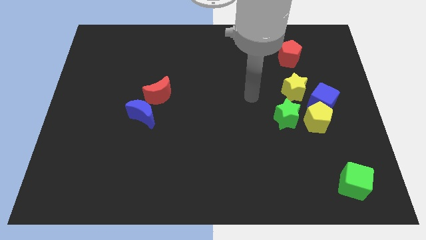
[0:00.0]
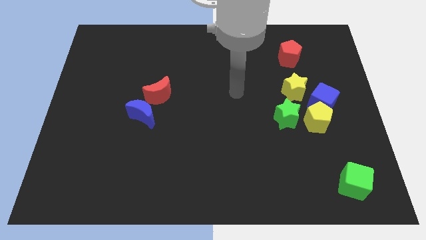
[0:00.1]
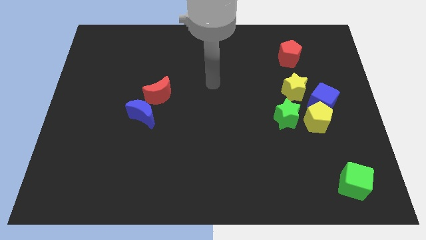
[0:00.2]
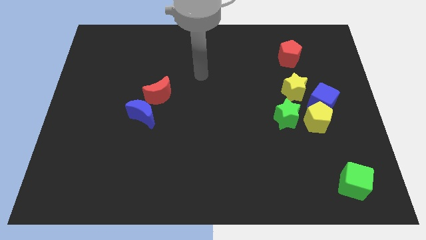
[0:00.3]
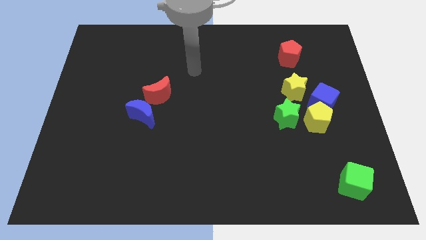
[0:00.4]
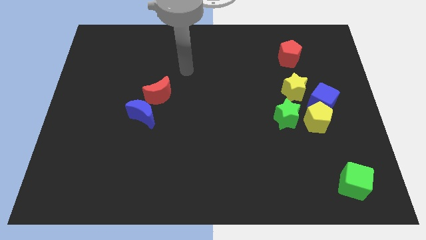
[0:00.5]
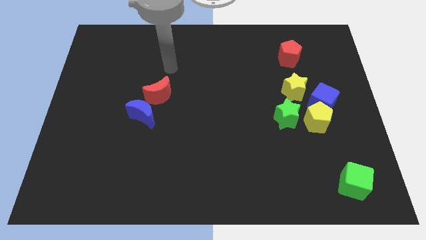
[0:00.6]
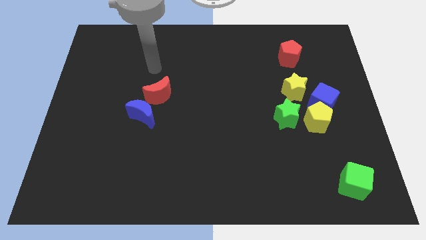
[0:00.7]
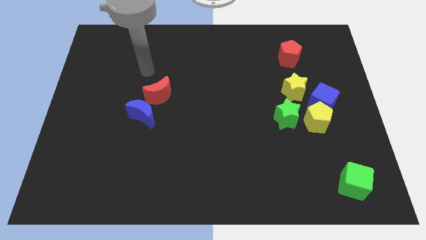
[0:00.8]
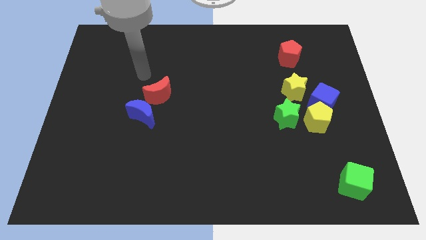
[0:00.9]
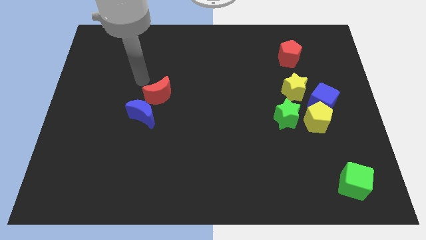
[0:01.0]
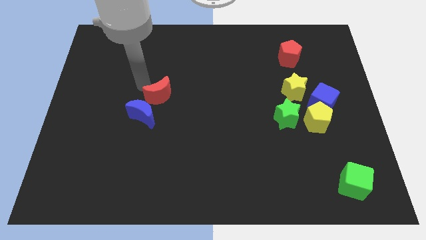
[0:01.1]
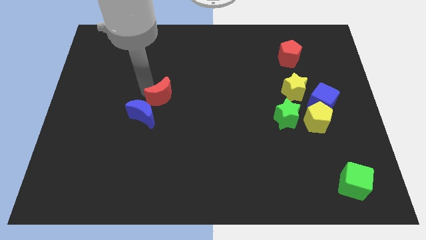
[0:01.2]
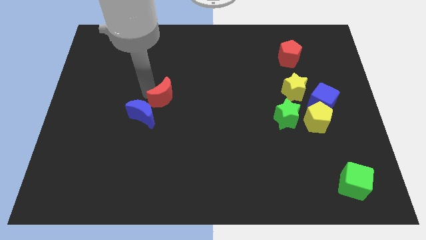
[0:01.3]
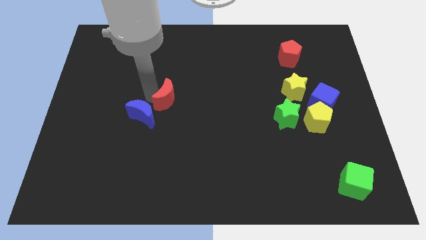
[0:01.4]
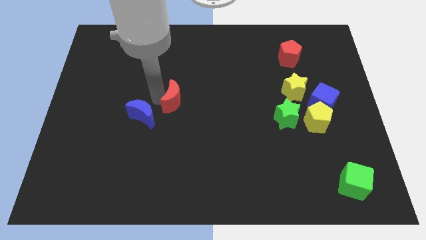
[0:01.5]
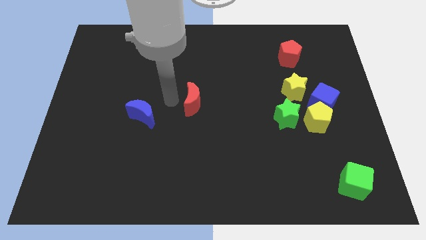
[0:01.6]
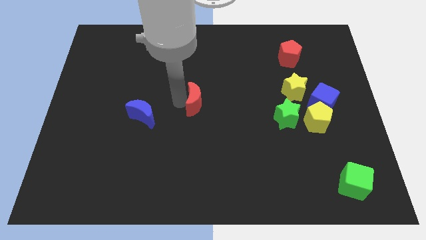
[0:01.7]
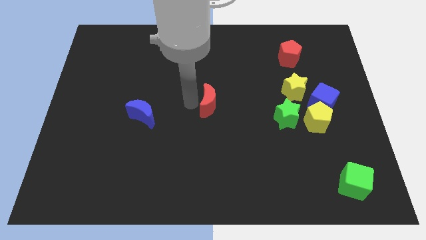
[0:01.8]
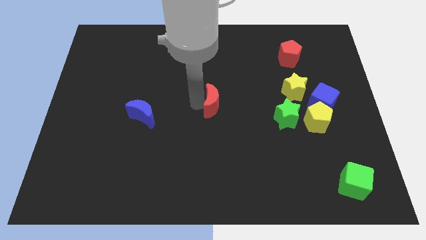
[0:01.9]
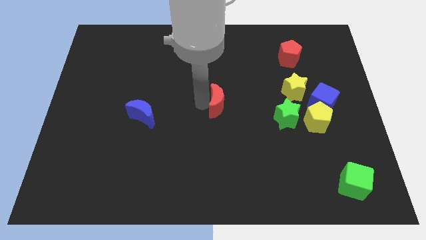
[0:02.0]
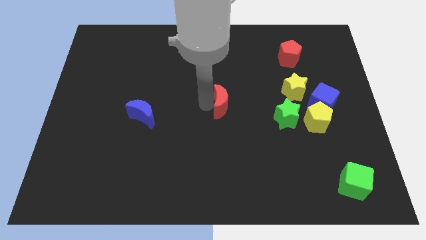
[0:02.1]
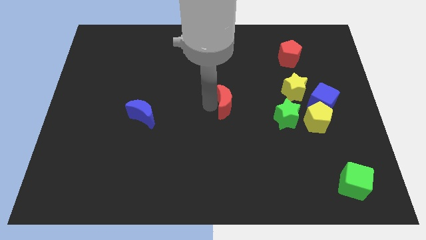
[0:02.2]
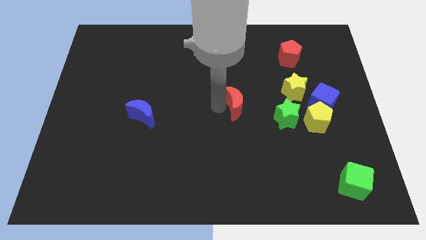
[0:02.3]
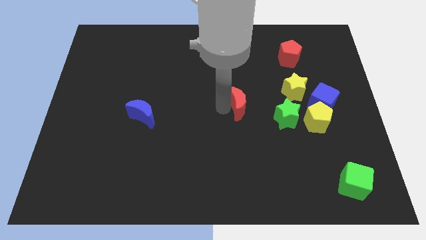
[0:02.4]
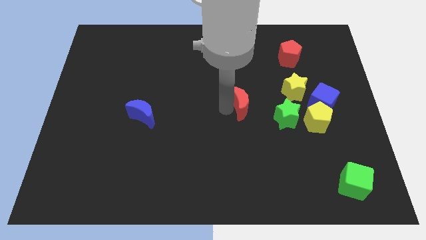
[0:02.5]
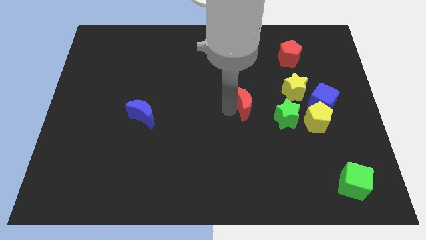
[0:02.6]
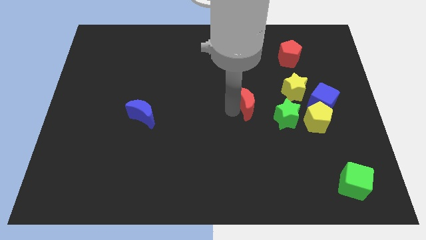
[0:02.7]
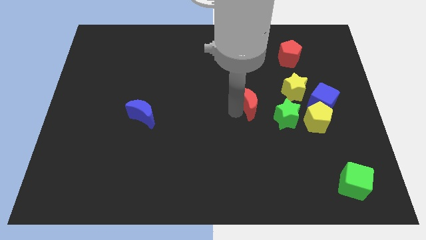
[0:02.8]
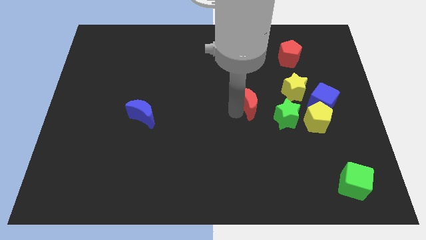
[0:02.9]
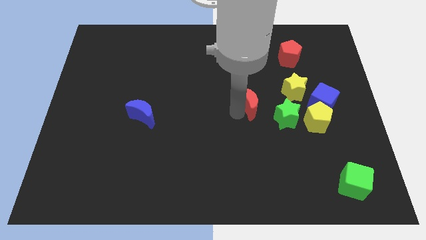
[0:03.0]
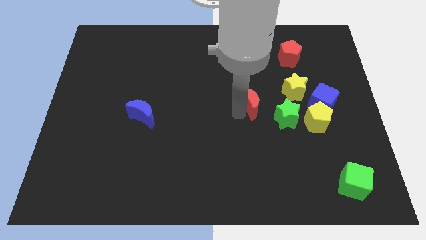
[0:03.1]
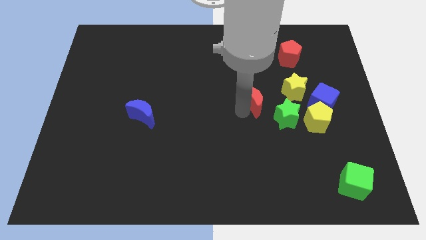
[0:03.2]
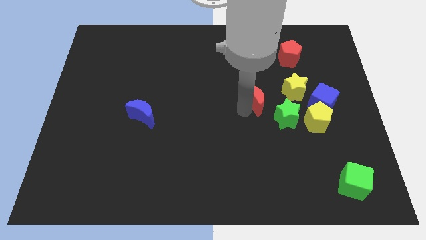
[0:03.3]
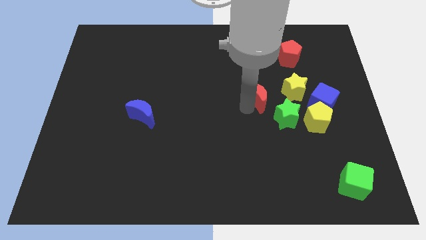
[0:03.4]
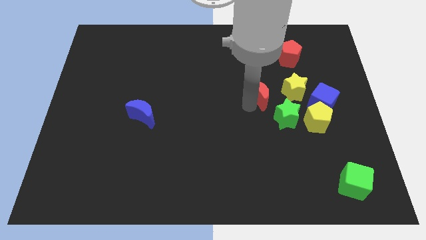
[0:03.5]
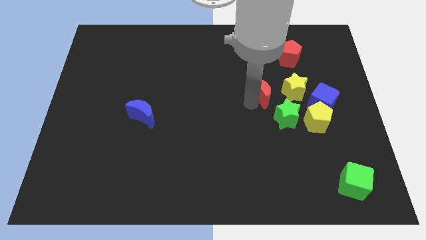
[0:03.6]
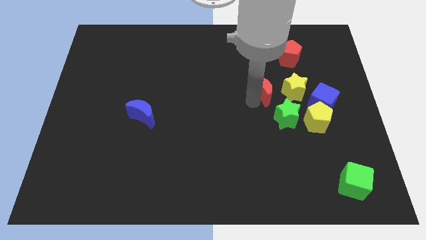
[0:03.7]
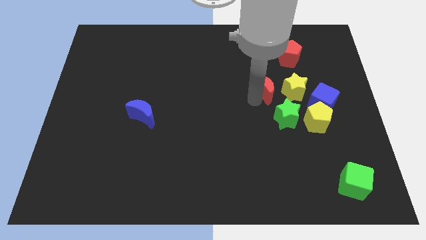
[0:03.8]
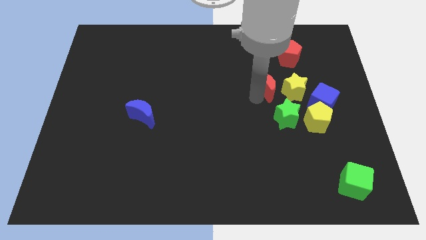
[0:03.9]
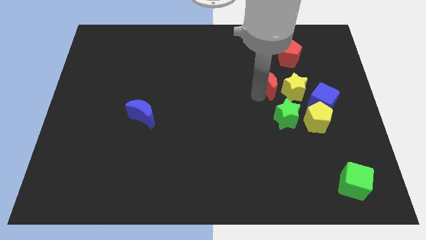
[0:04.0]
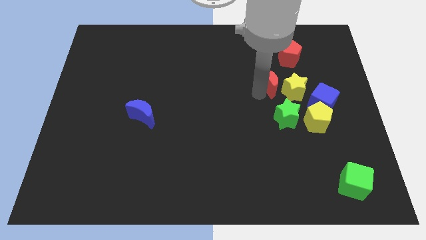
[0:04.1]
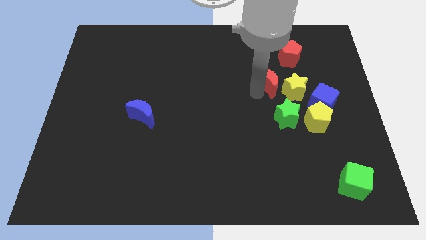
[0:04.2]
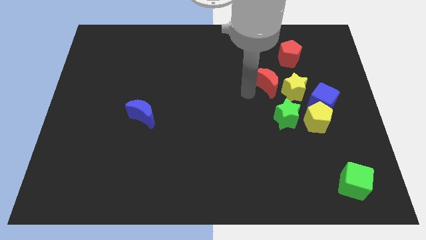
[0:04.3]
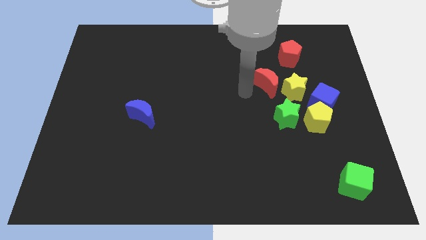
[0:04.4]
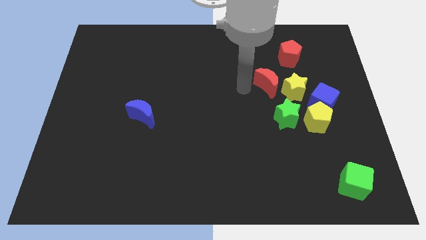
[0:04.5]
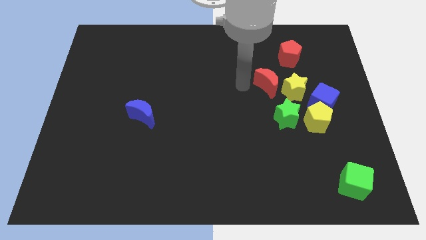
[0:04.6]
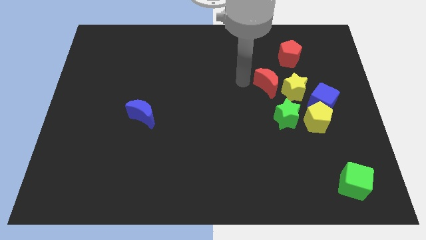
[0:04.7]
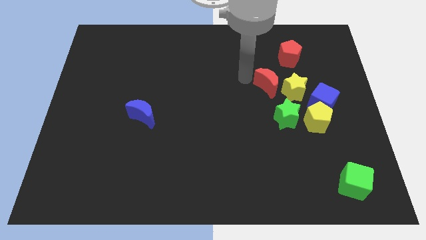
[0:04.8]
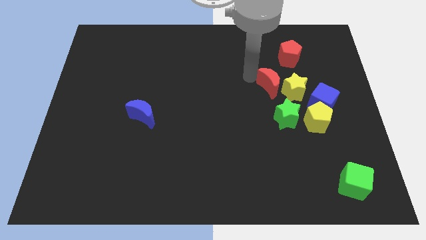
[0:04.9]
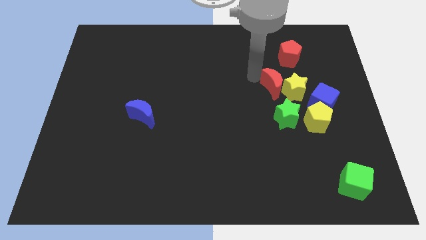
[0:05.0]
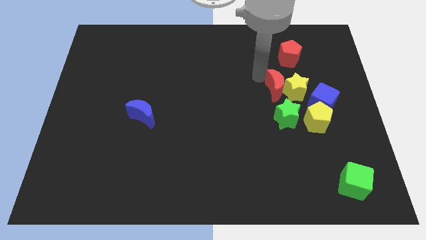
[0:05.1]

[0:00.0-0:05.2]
move the red moon next to the yellow star

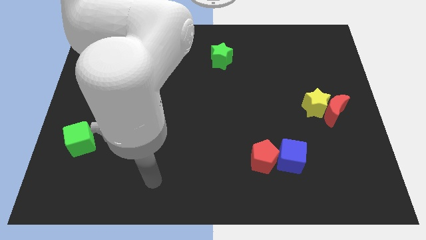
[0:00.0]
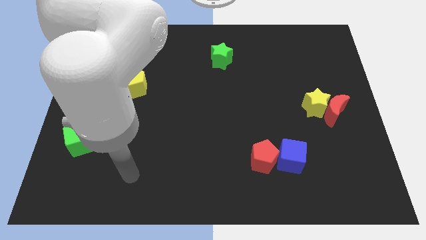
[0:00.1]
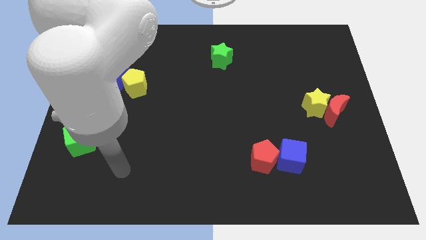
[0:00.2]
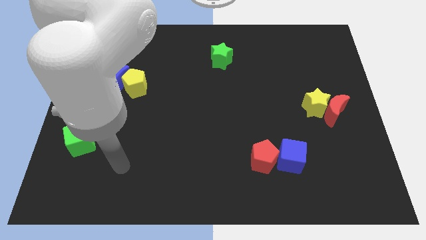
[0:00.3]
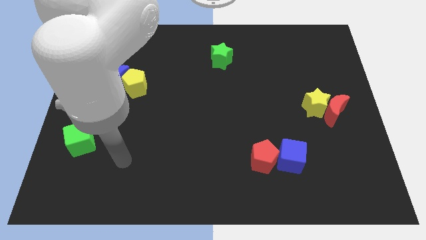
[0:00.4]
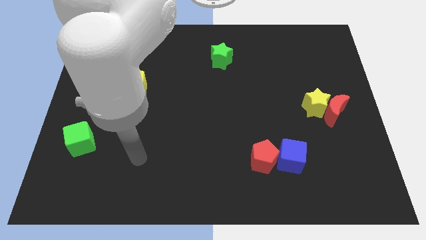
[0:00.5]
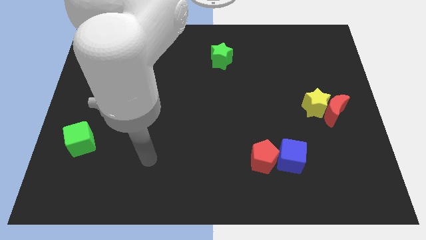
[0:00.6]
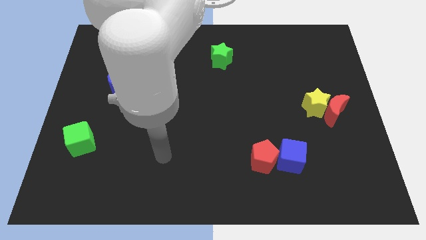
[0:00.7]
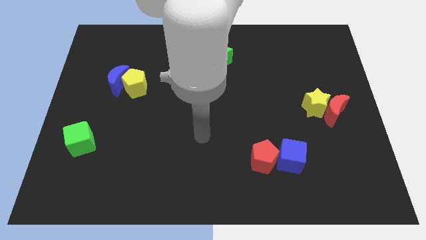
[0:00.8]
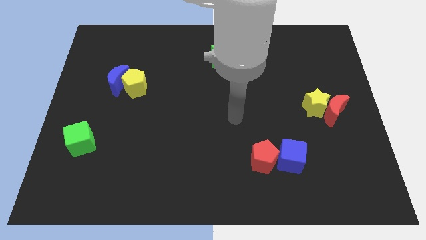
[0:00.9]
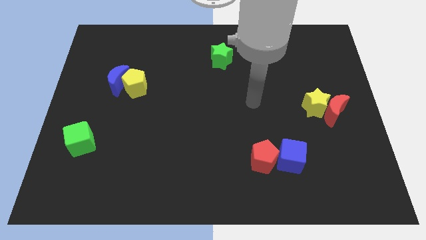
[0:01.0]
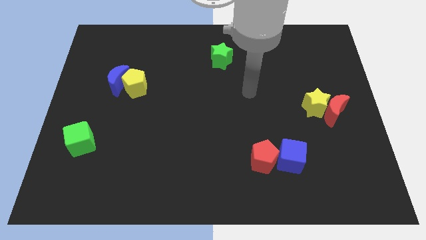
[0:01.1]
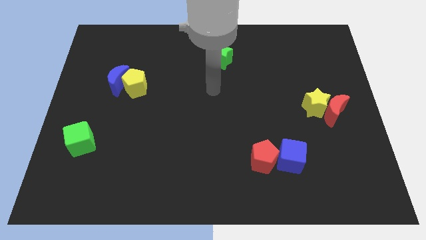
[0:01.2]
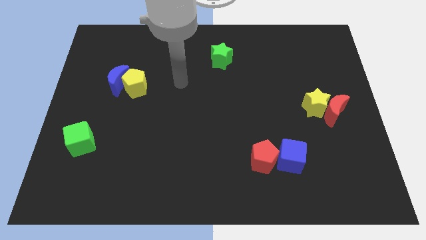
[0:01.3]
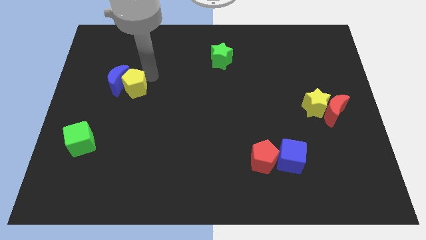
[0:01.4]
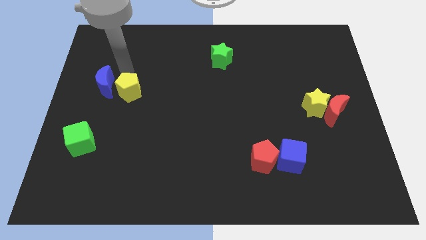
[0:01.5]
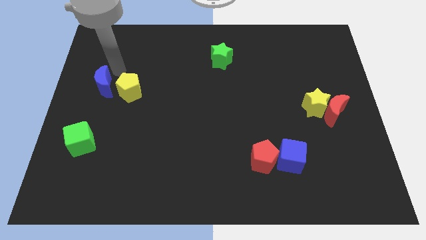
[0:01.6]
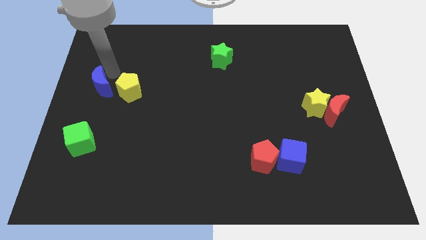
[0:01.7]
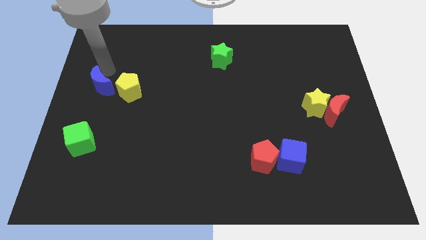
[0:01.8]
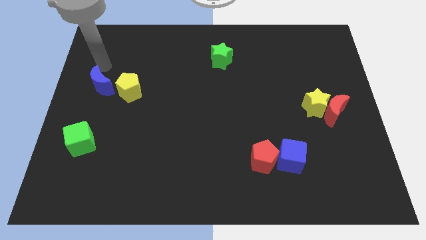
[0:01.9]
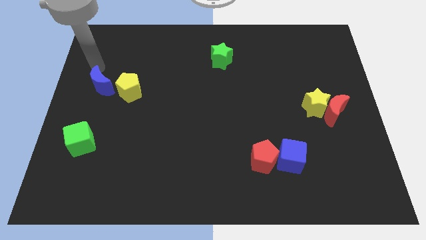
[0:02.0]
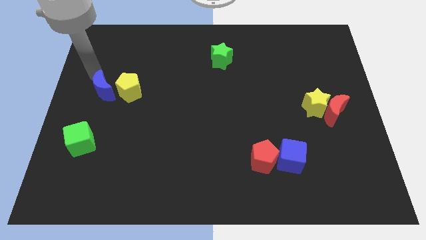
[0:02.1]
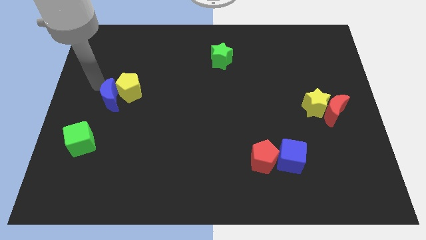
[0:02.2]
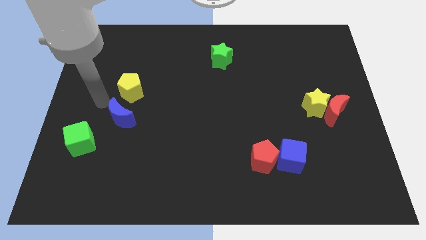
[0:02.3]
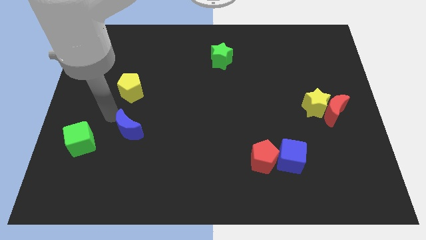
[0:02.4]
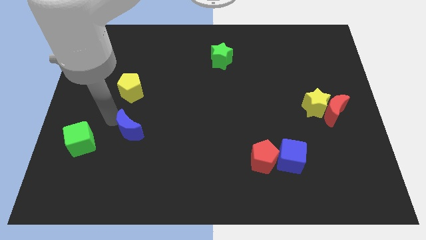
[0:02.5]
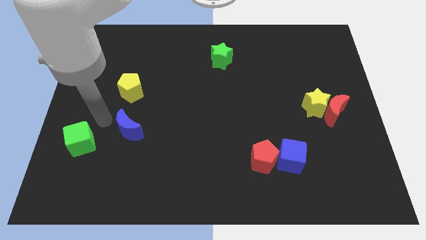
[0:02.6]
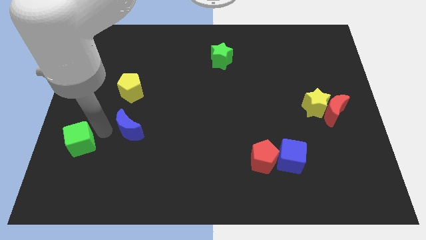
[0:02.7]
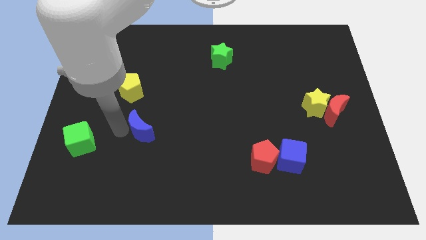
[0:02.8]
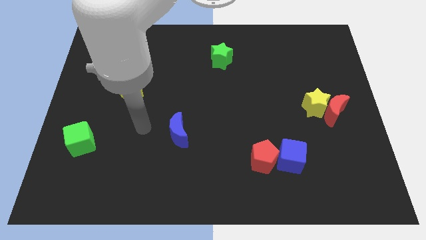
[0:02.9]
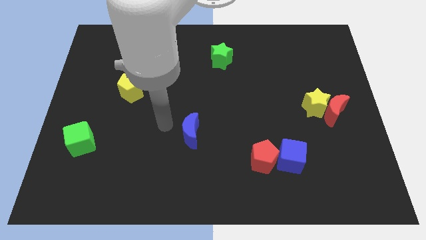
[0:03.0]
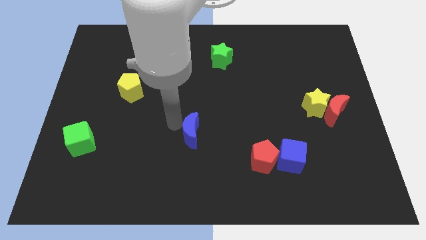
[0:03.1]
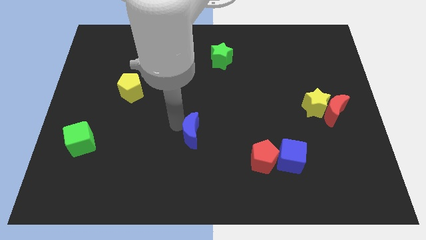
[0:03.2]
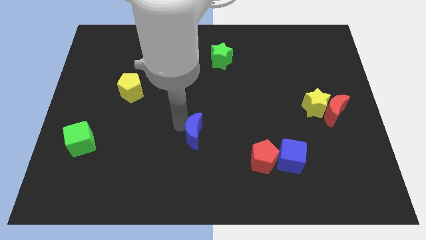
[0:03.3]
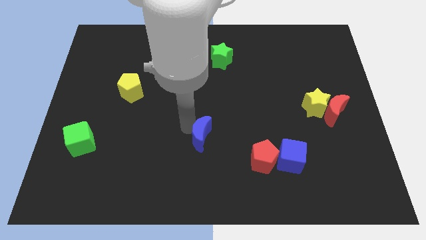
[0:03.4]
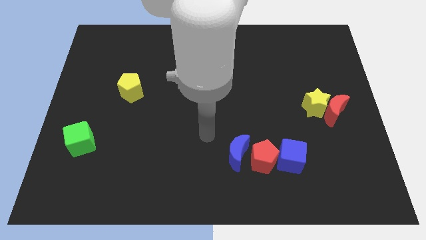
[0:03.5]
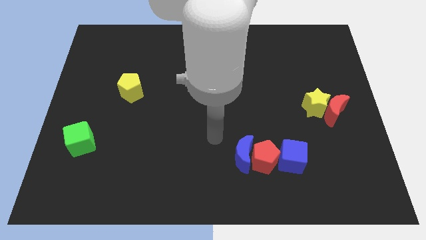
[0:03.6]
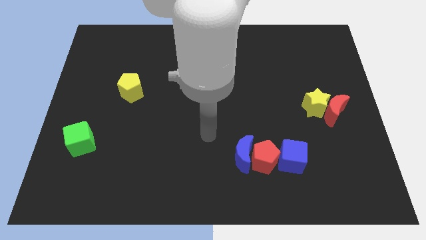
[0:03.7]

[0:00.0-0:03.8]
put the blue moon next to the red pentagon
